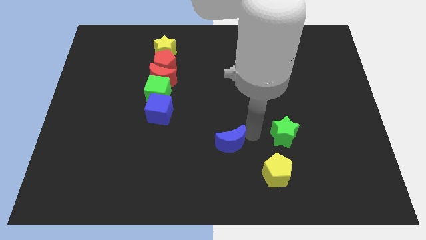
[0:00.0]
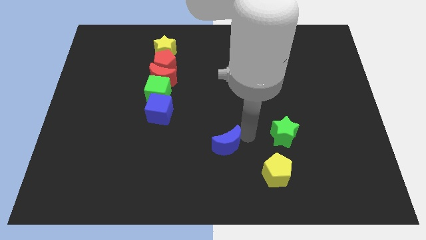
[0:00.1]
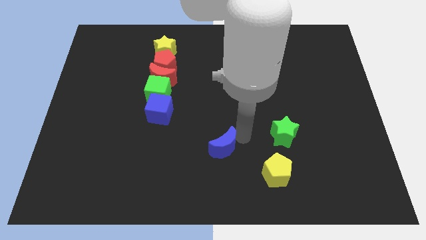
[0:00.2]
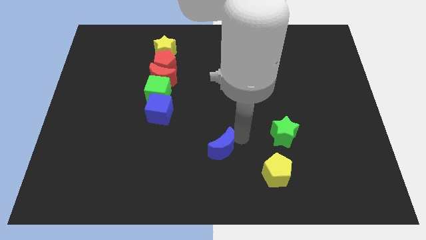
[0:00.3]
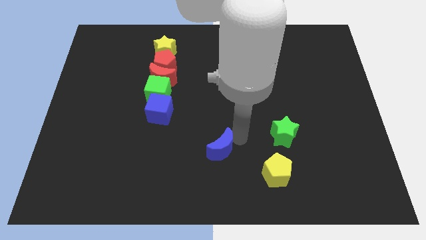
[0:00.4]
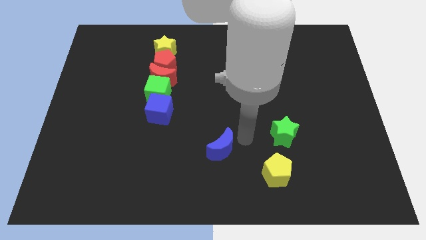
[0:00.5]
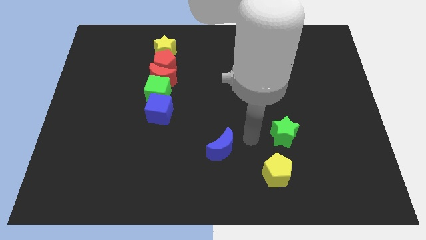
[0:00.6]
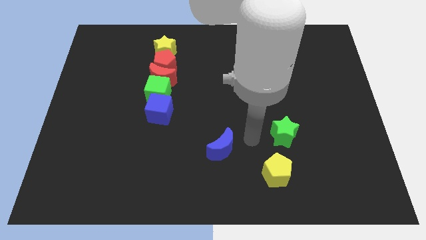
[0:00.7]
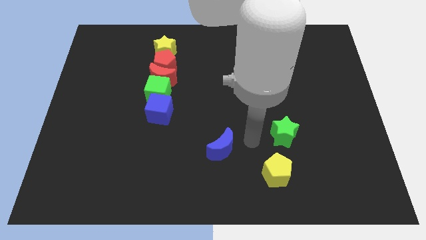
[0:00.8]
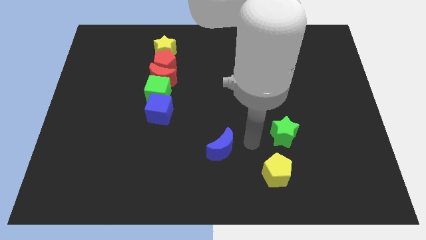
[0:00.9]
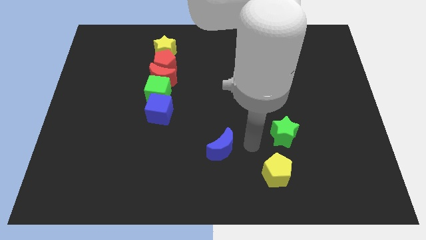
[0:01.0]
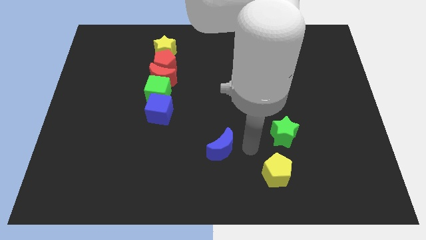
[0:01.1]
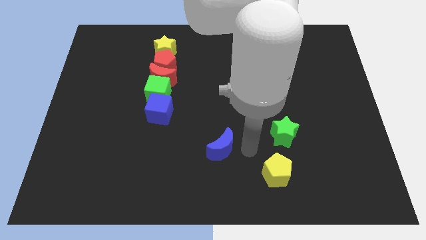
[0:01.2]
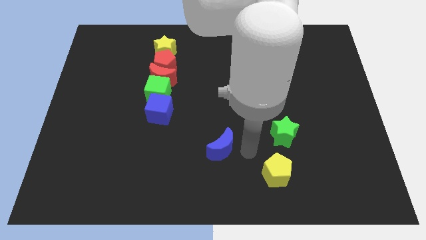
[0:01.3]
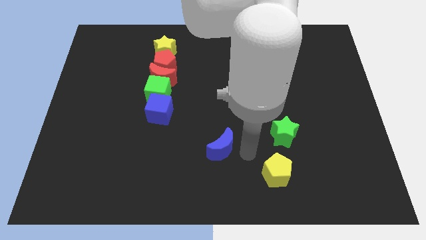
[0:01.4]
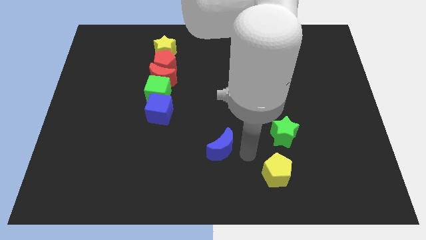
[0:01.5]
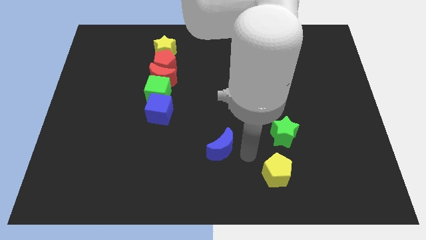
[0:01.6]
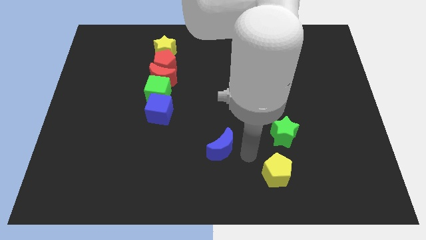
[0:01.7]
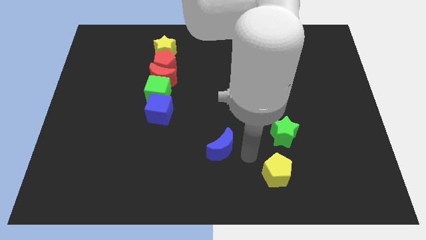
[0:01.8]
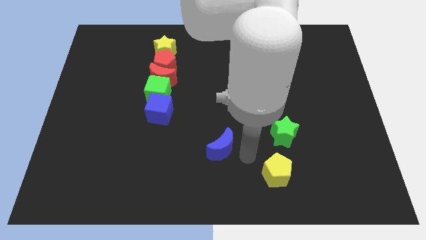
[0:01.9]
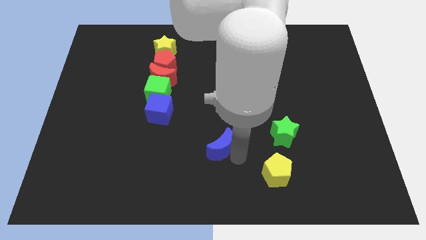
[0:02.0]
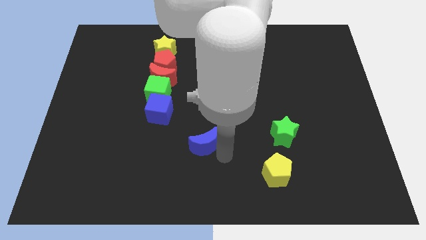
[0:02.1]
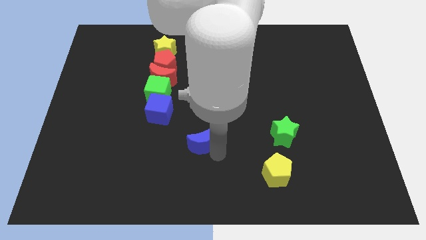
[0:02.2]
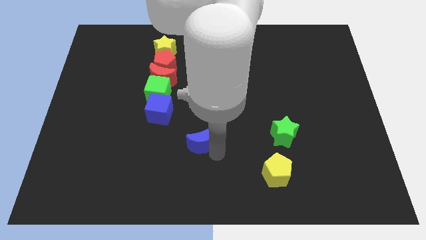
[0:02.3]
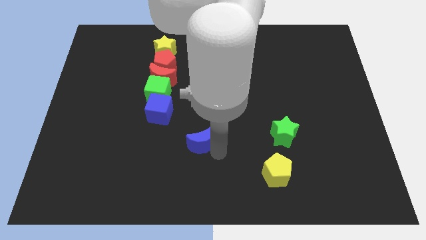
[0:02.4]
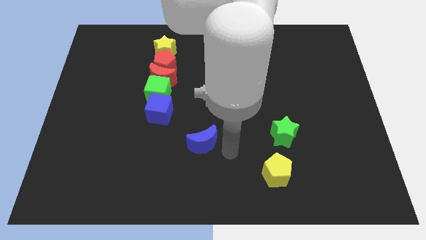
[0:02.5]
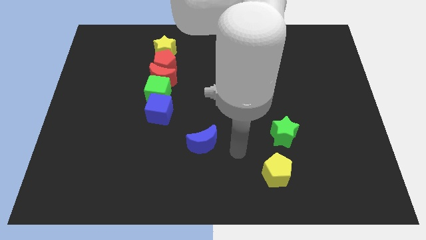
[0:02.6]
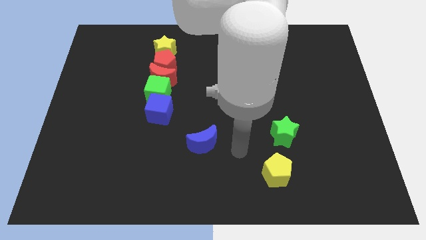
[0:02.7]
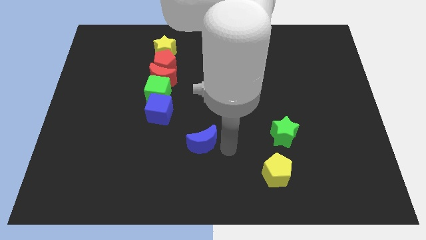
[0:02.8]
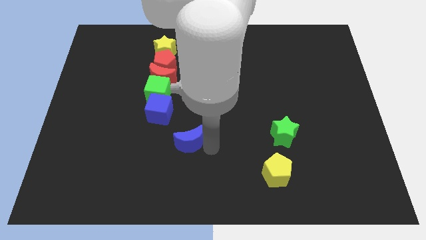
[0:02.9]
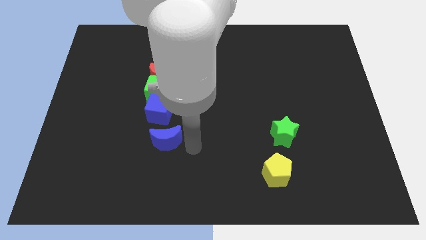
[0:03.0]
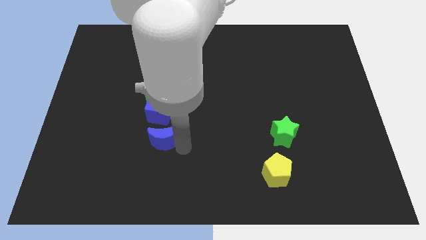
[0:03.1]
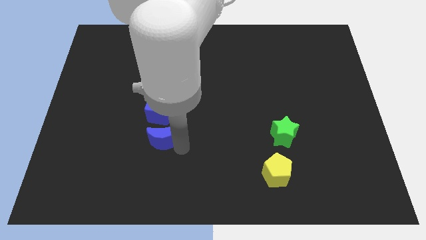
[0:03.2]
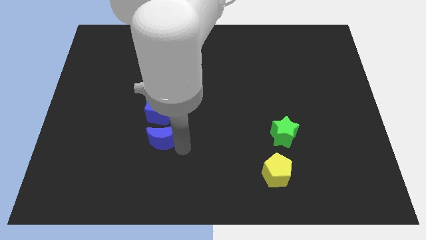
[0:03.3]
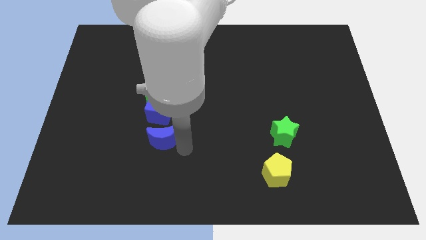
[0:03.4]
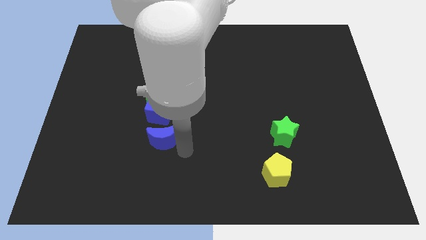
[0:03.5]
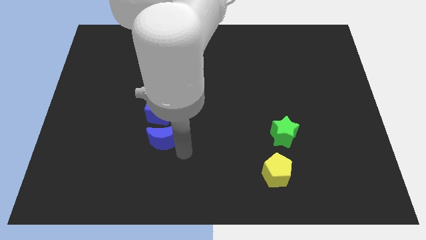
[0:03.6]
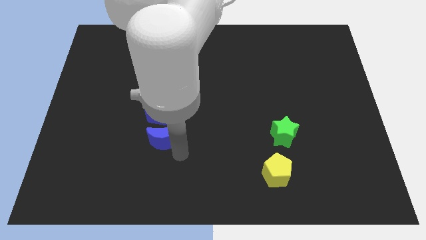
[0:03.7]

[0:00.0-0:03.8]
place the blue moon horizontal to the green star

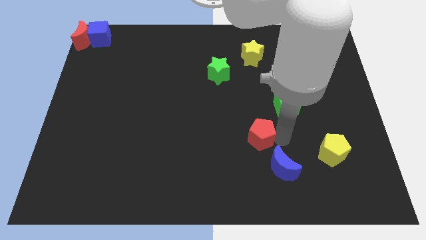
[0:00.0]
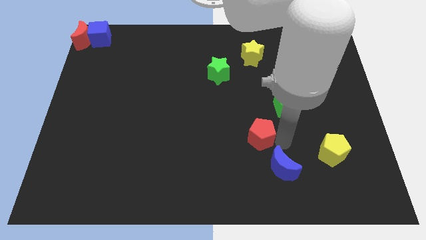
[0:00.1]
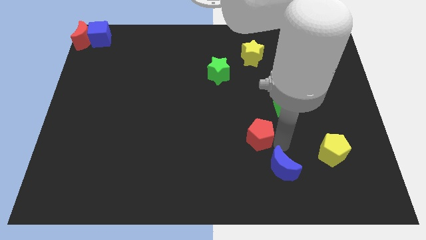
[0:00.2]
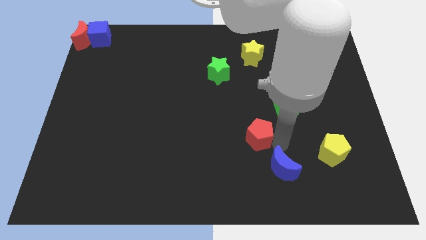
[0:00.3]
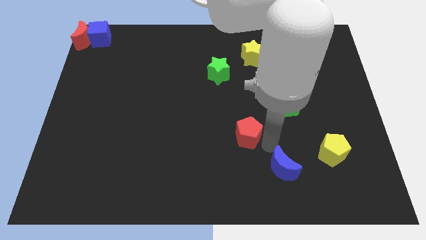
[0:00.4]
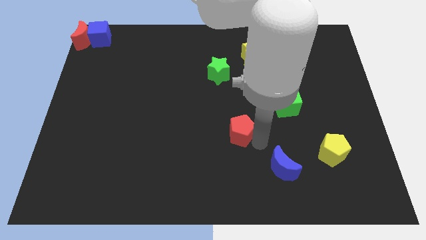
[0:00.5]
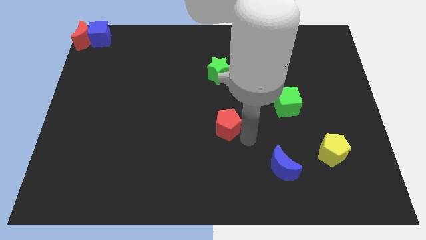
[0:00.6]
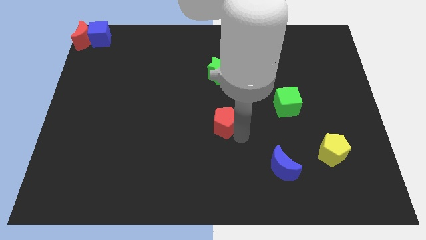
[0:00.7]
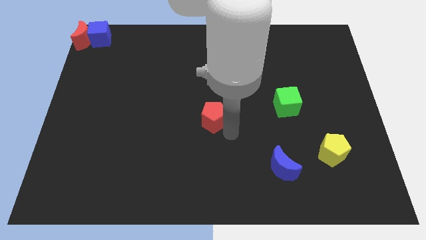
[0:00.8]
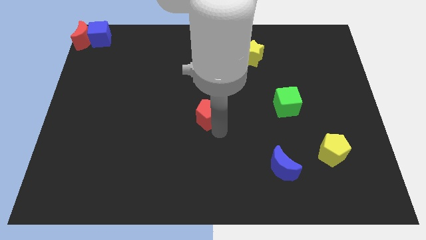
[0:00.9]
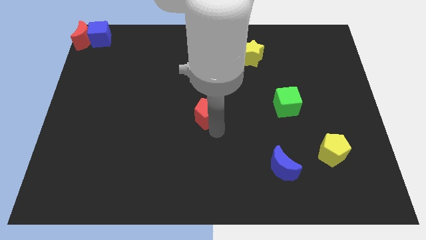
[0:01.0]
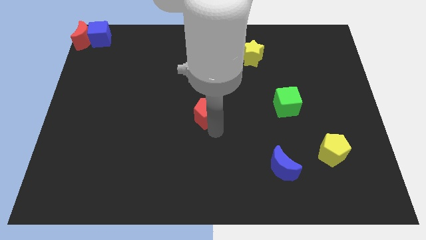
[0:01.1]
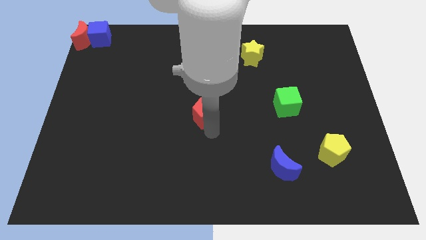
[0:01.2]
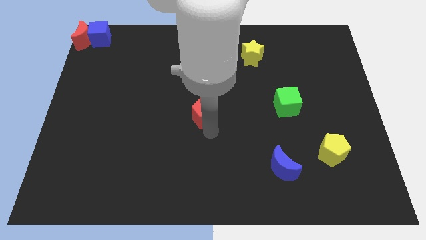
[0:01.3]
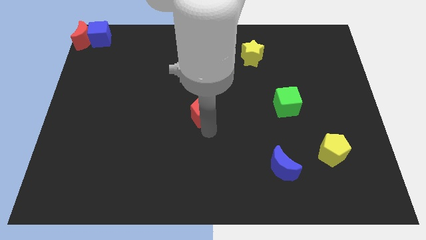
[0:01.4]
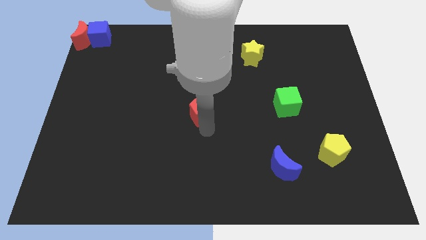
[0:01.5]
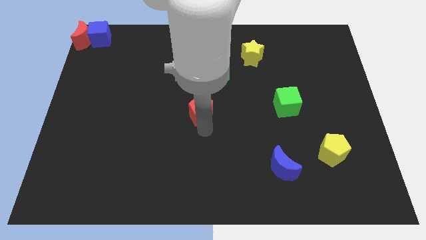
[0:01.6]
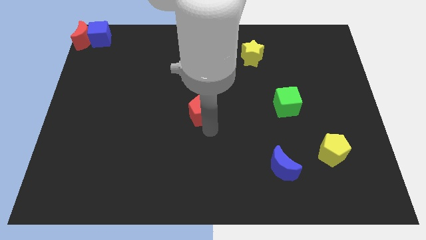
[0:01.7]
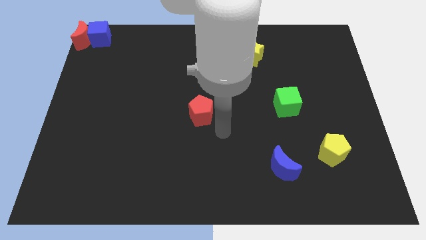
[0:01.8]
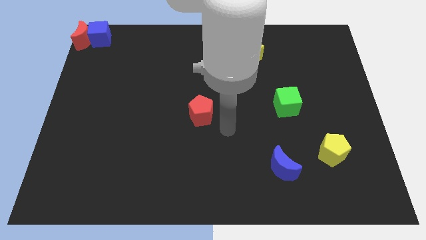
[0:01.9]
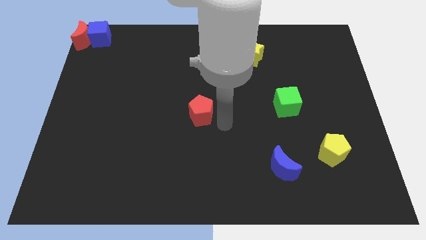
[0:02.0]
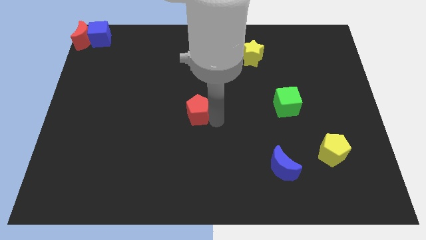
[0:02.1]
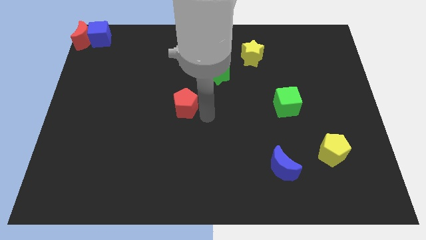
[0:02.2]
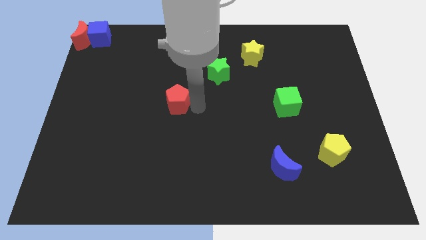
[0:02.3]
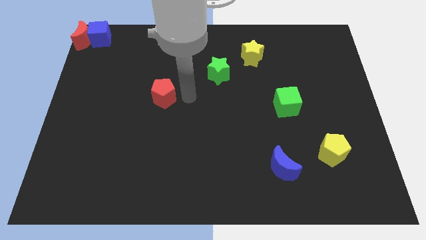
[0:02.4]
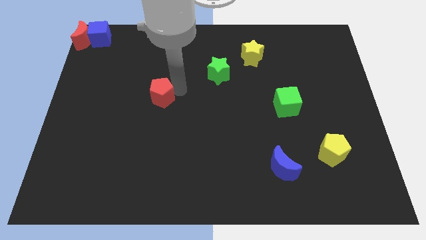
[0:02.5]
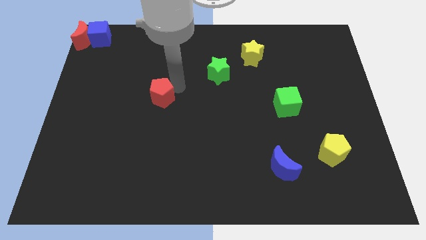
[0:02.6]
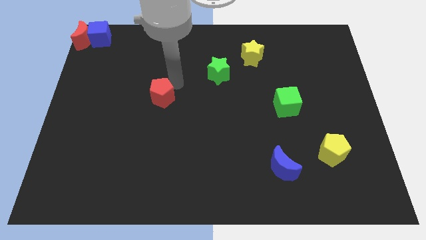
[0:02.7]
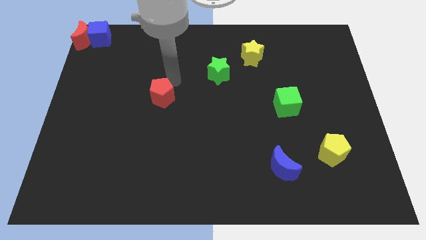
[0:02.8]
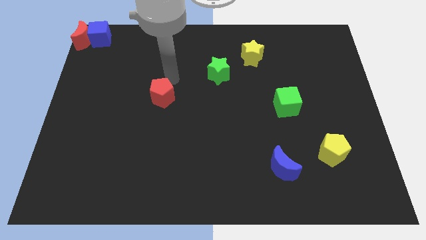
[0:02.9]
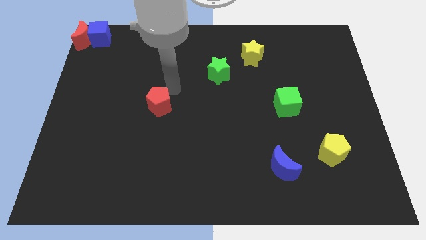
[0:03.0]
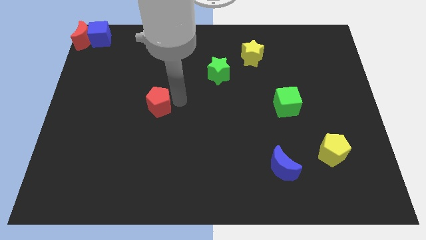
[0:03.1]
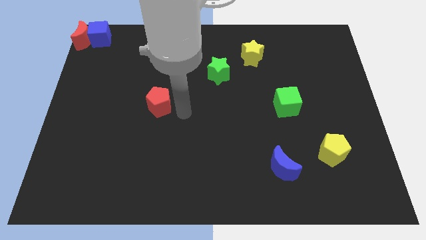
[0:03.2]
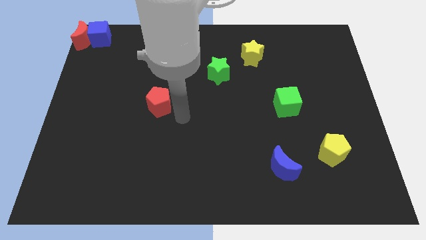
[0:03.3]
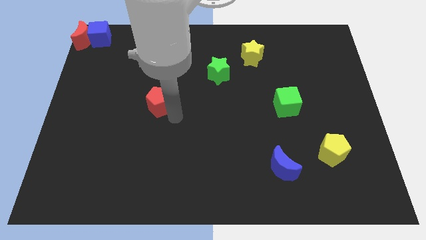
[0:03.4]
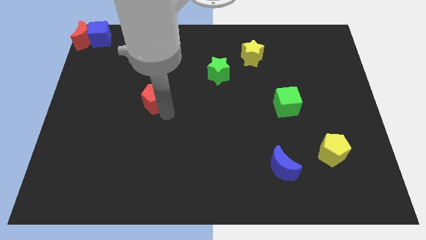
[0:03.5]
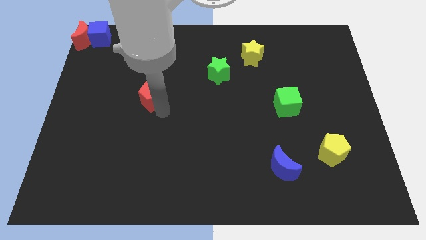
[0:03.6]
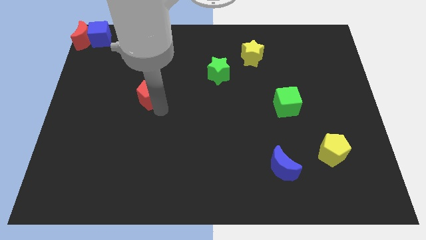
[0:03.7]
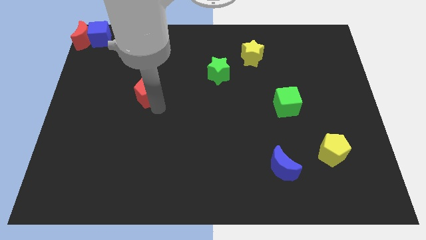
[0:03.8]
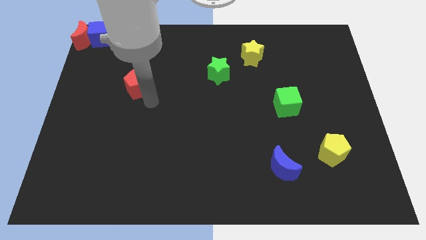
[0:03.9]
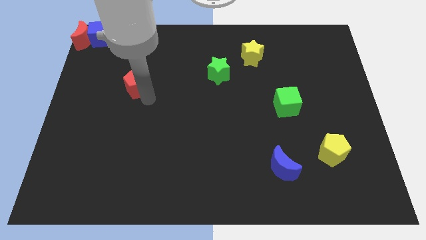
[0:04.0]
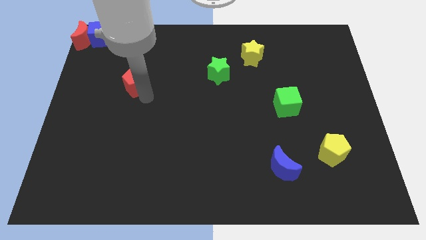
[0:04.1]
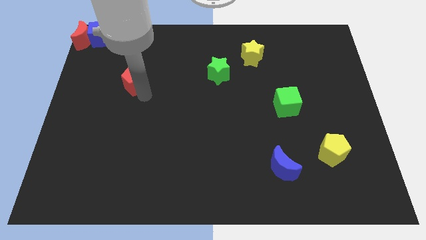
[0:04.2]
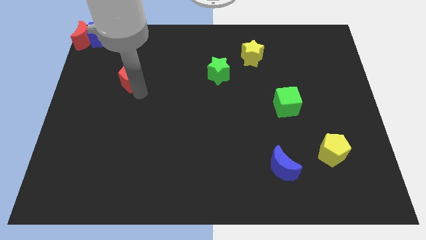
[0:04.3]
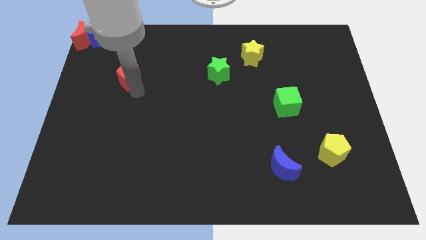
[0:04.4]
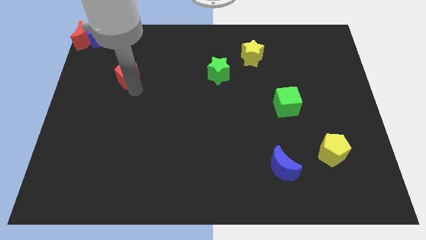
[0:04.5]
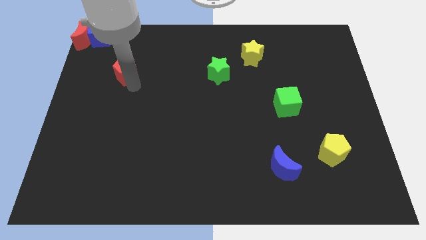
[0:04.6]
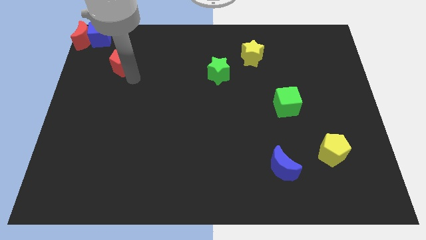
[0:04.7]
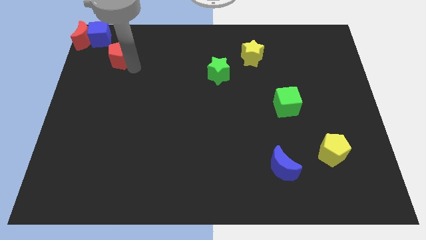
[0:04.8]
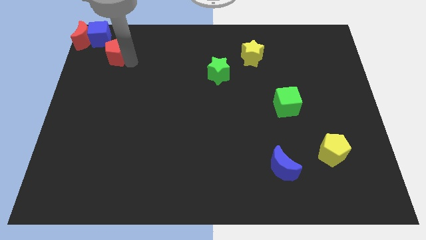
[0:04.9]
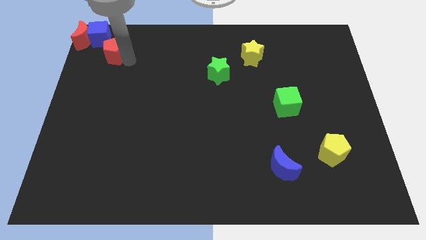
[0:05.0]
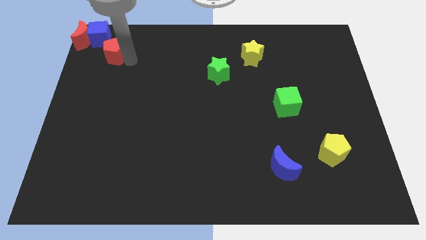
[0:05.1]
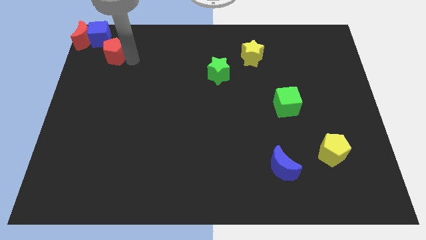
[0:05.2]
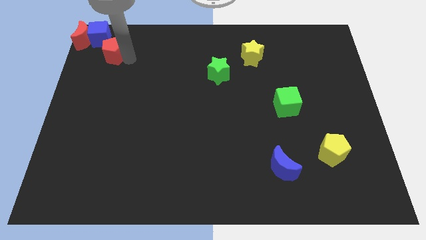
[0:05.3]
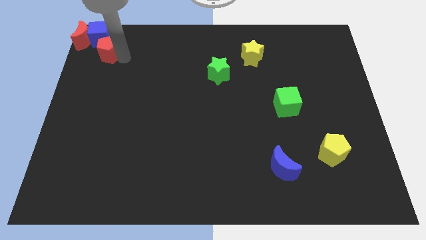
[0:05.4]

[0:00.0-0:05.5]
push the red pentagon to the top left corner of the board
